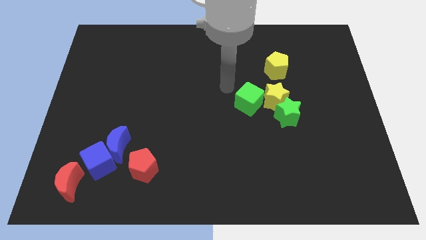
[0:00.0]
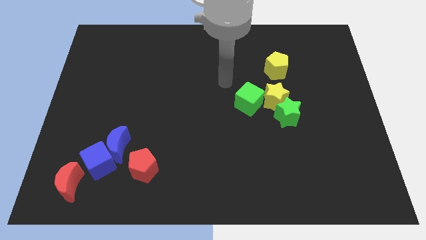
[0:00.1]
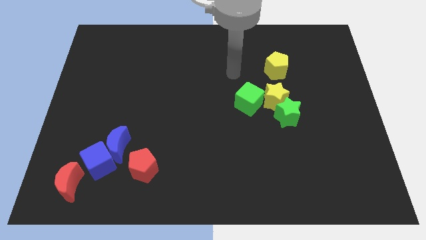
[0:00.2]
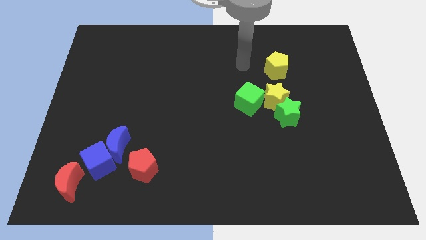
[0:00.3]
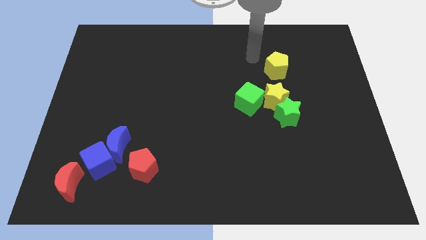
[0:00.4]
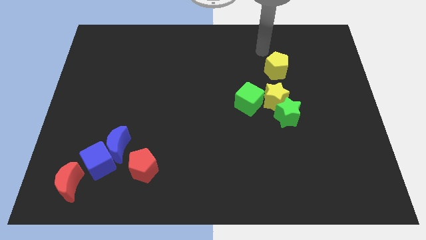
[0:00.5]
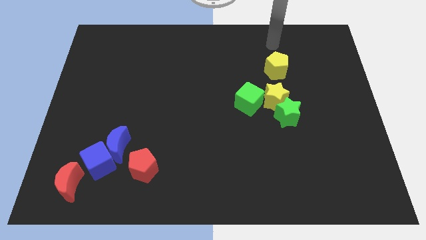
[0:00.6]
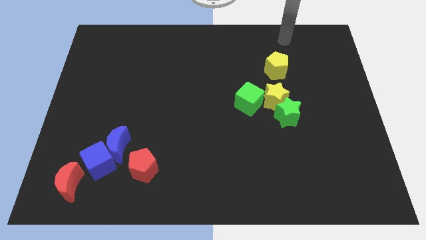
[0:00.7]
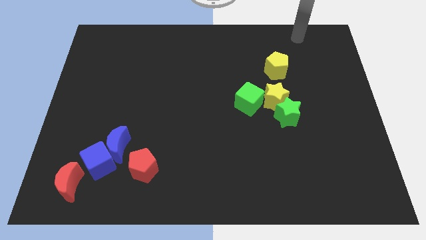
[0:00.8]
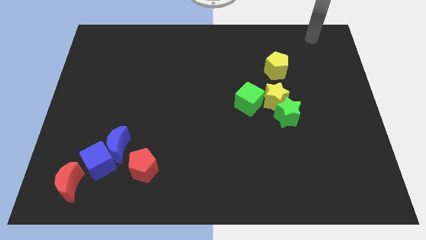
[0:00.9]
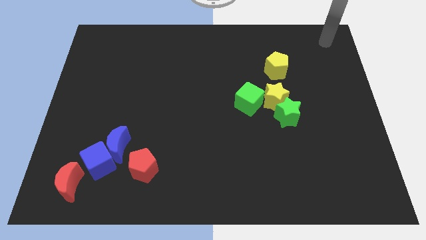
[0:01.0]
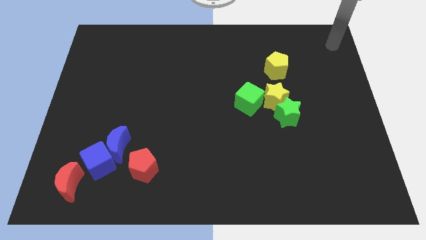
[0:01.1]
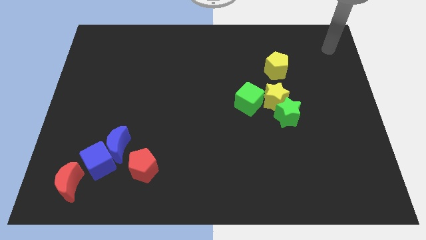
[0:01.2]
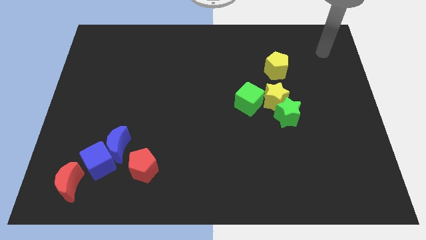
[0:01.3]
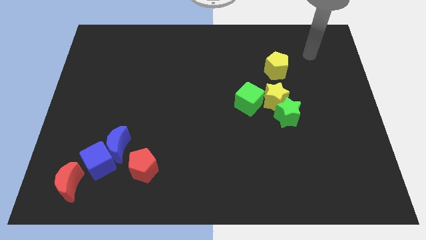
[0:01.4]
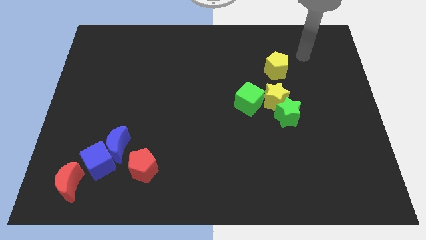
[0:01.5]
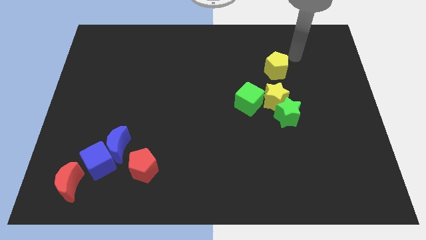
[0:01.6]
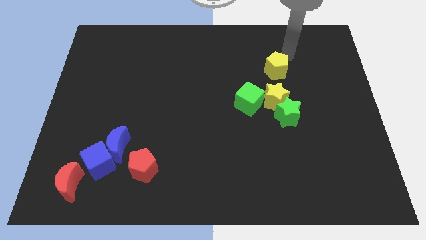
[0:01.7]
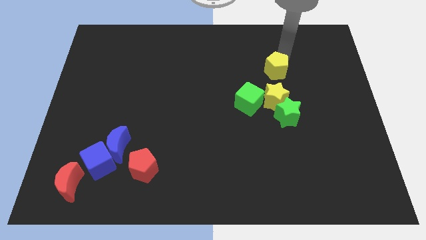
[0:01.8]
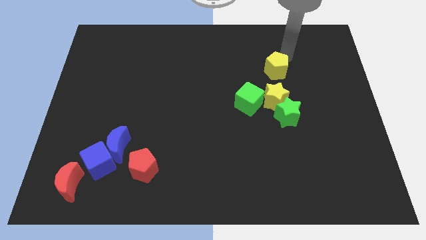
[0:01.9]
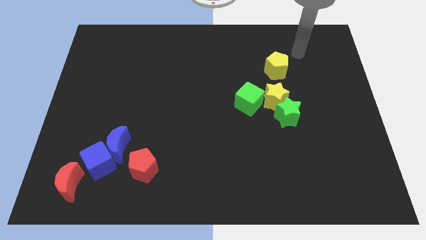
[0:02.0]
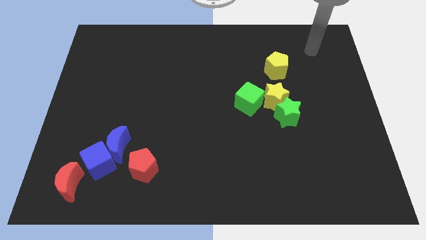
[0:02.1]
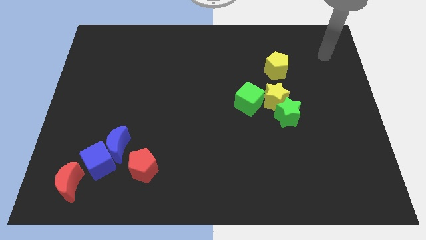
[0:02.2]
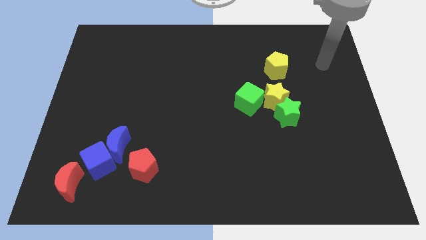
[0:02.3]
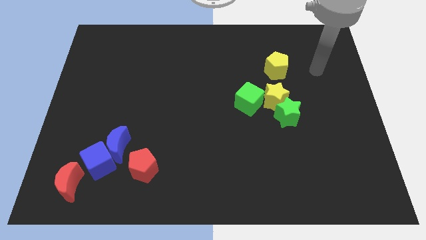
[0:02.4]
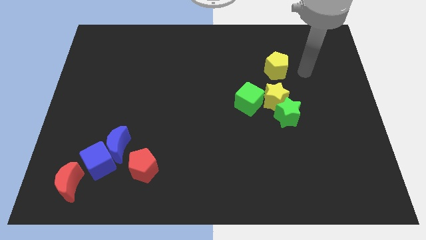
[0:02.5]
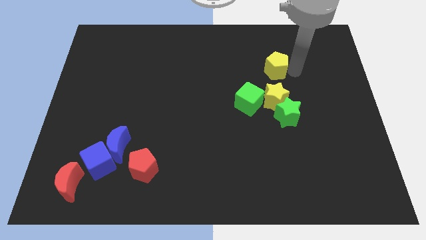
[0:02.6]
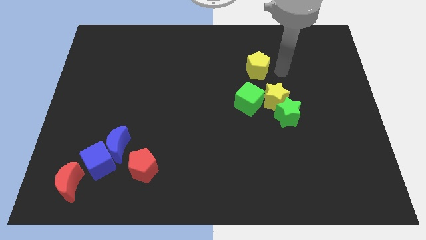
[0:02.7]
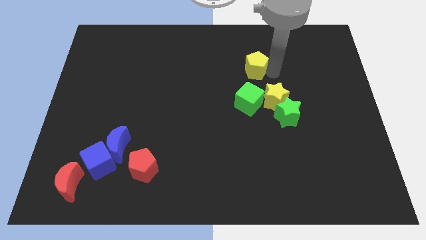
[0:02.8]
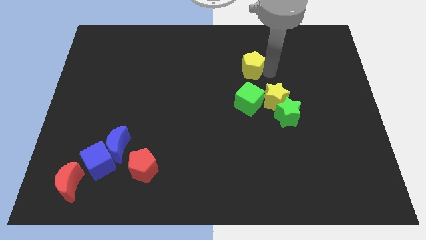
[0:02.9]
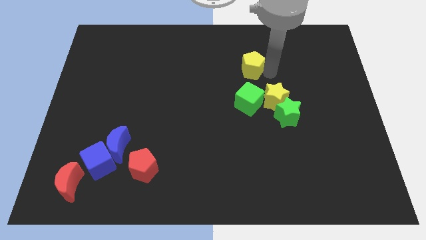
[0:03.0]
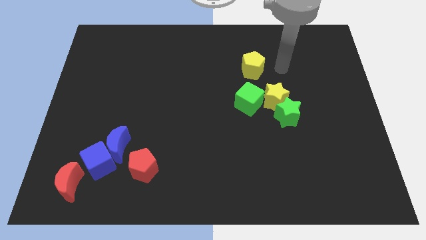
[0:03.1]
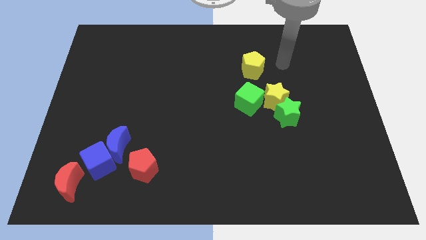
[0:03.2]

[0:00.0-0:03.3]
place the yellow pentagon above the green cube

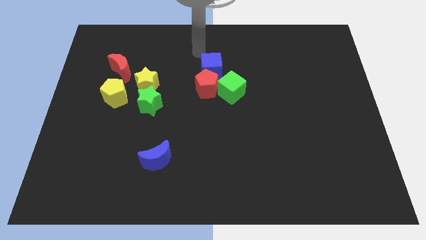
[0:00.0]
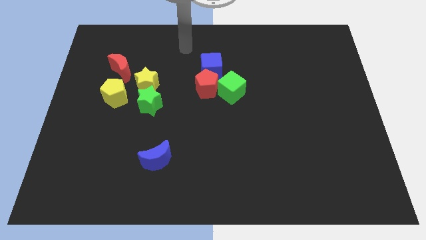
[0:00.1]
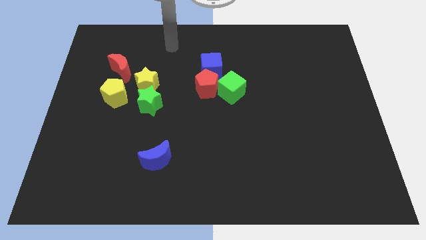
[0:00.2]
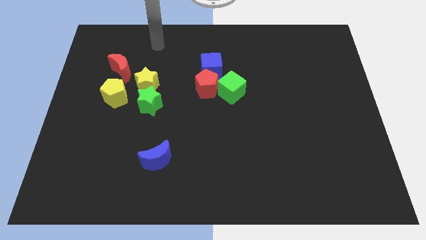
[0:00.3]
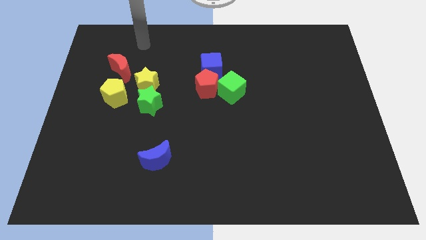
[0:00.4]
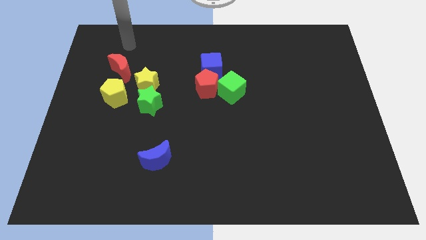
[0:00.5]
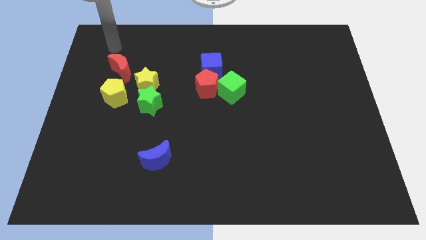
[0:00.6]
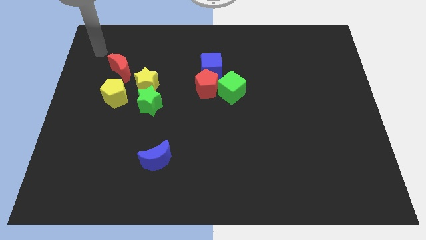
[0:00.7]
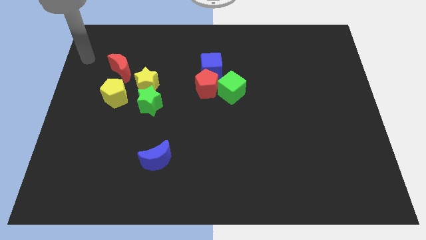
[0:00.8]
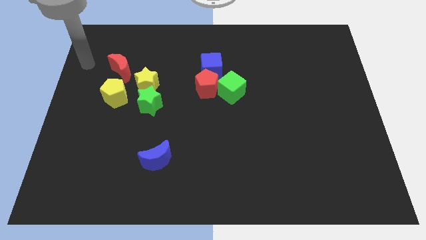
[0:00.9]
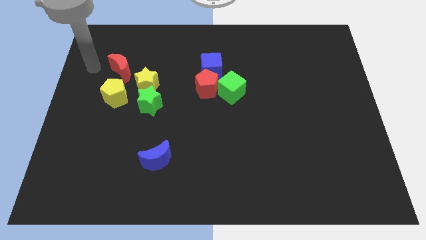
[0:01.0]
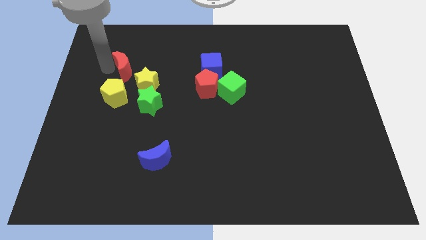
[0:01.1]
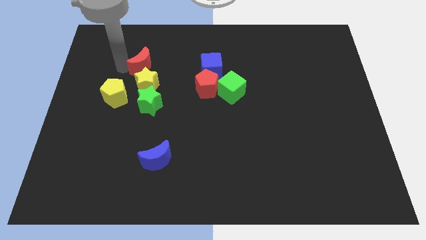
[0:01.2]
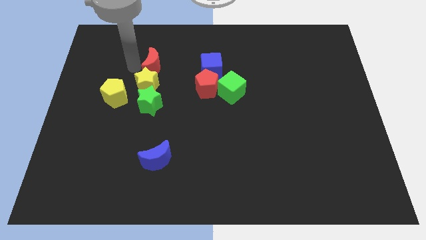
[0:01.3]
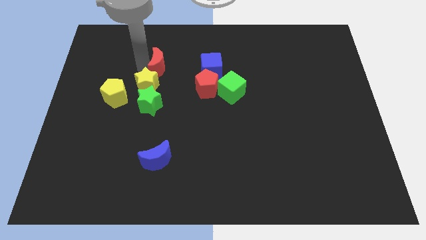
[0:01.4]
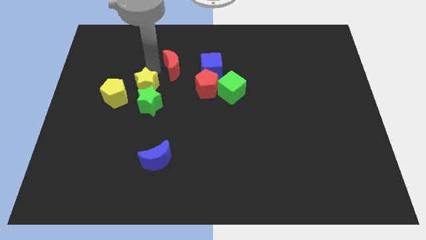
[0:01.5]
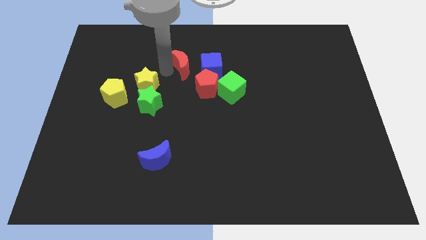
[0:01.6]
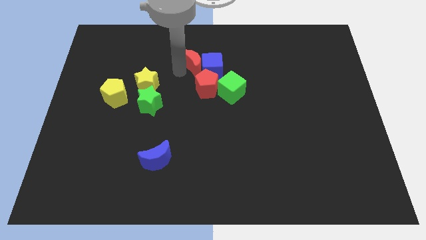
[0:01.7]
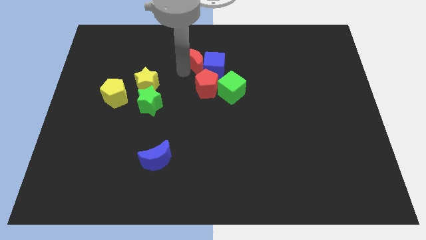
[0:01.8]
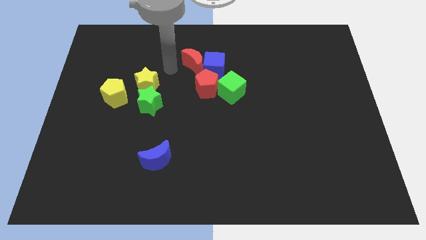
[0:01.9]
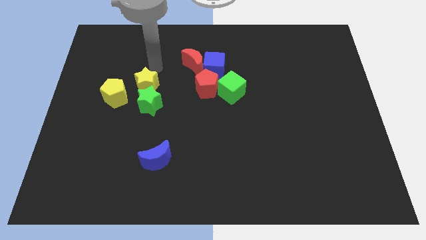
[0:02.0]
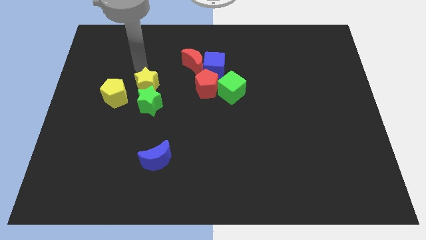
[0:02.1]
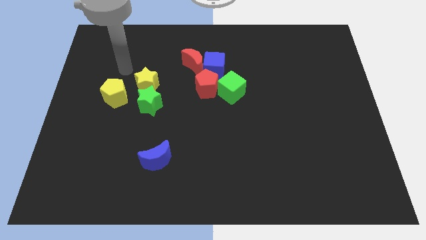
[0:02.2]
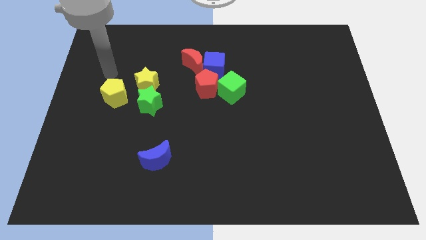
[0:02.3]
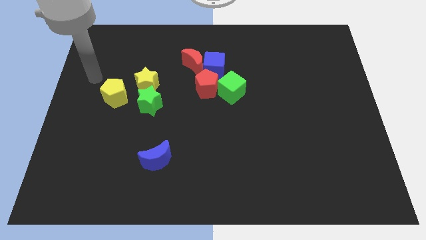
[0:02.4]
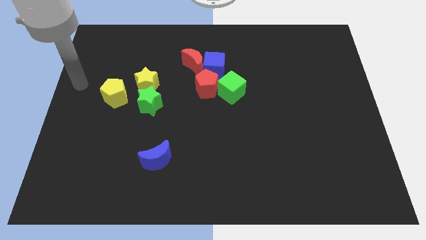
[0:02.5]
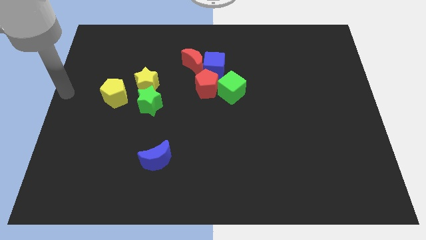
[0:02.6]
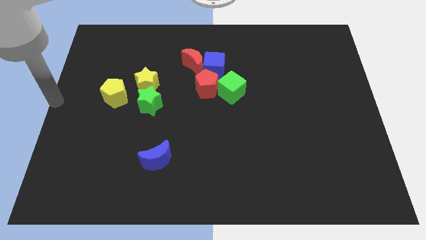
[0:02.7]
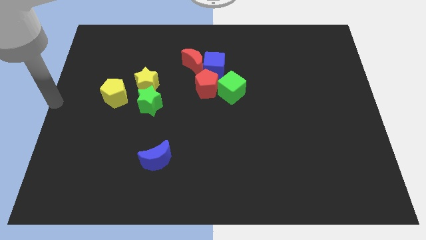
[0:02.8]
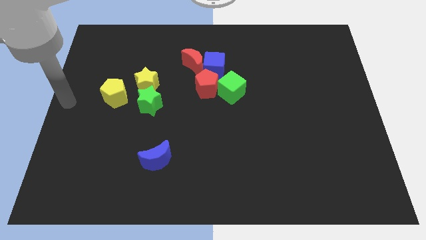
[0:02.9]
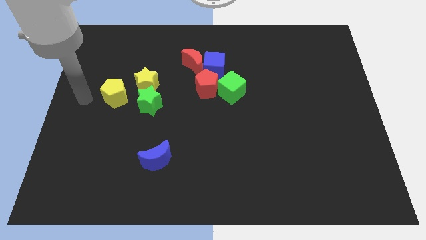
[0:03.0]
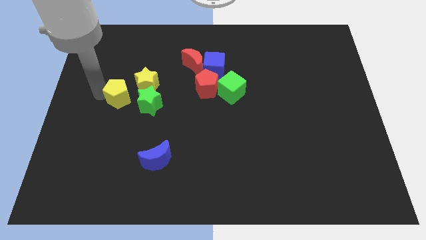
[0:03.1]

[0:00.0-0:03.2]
move the red moon into the blue cube

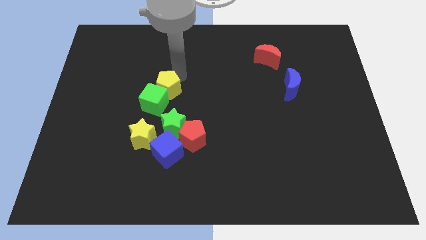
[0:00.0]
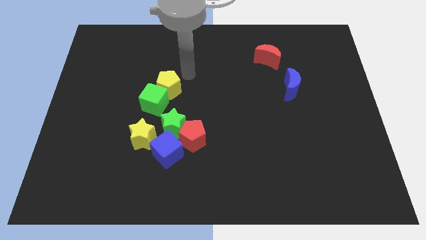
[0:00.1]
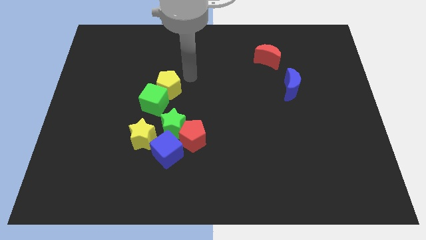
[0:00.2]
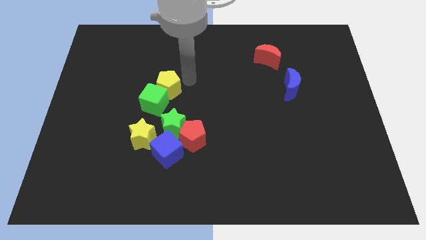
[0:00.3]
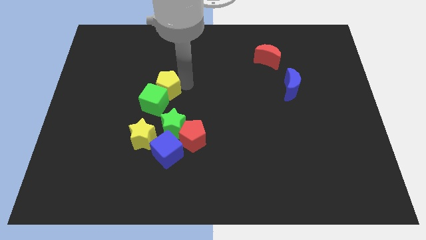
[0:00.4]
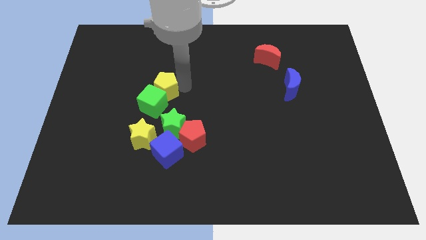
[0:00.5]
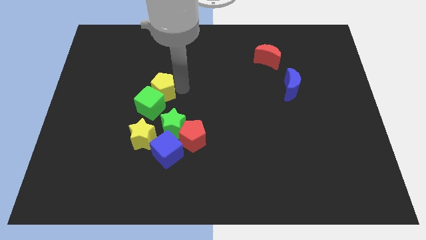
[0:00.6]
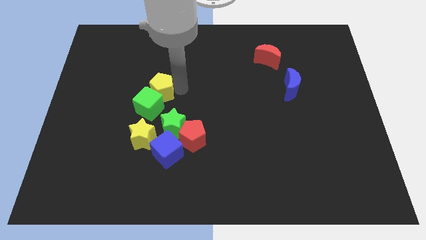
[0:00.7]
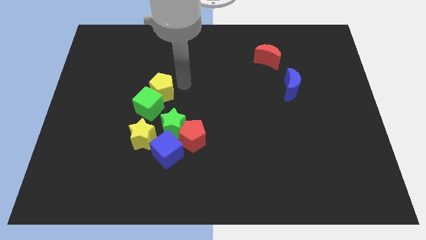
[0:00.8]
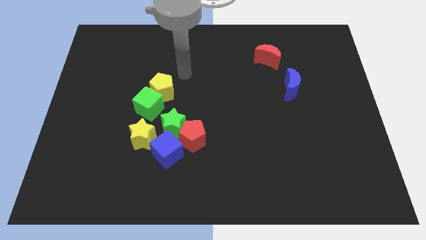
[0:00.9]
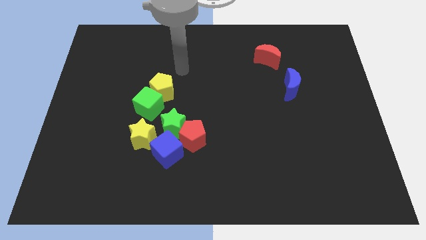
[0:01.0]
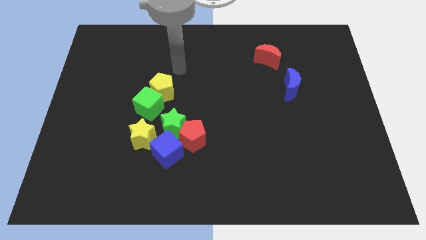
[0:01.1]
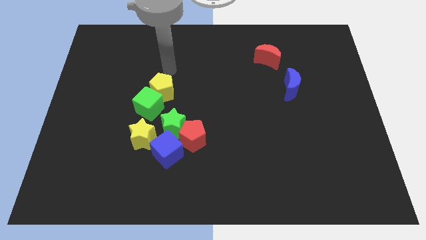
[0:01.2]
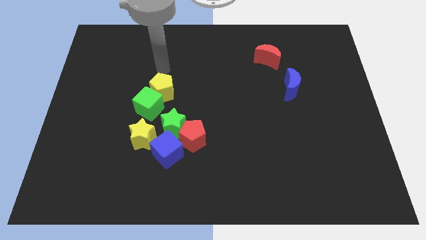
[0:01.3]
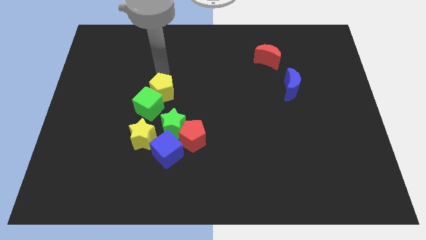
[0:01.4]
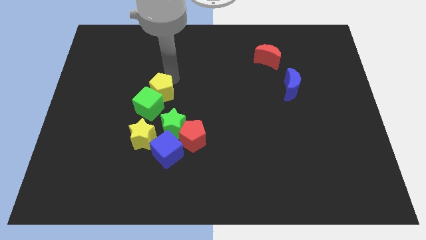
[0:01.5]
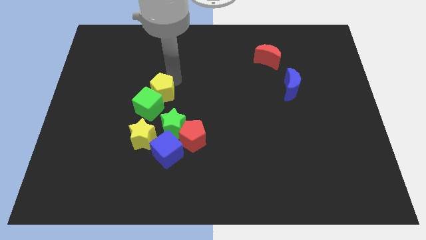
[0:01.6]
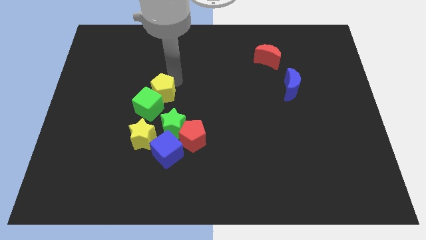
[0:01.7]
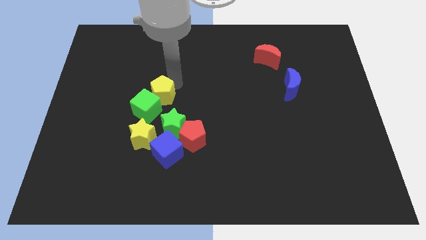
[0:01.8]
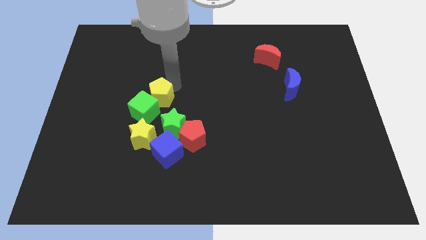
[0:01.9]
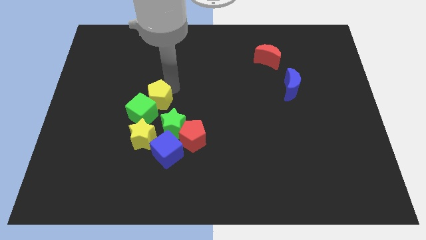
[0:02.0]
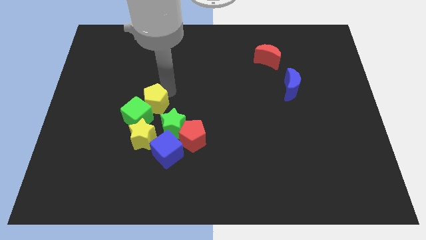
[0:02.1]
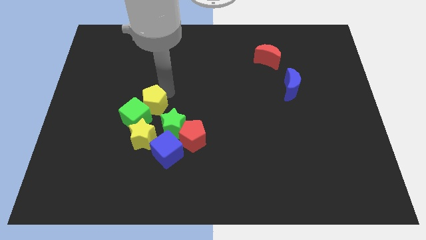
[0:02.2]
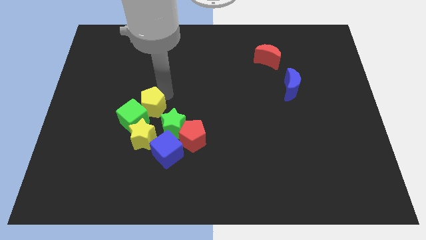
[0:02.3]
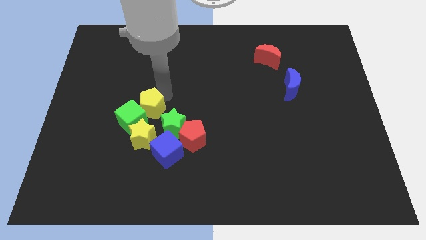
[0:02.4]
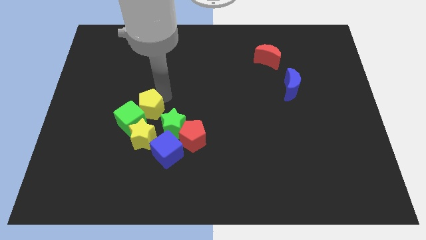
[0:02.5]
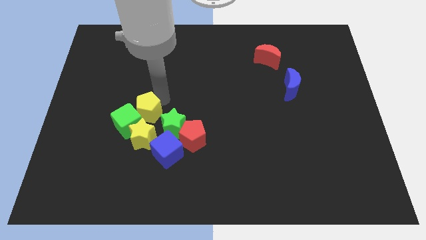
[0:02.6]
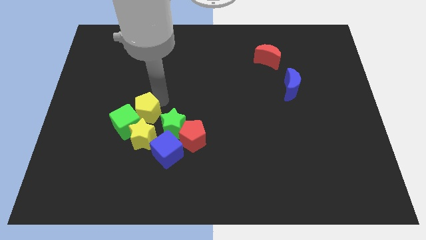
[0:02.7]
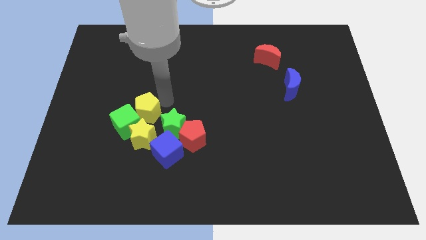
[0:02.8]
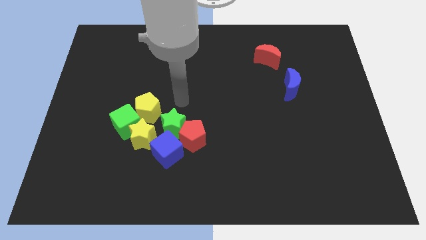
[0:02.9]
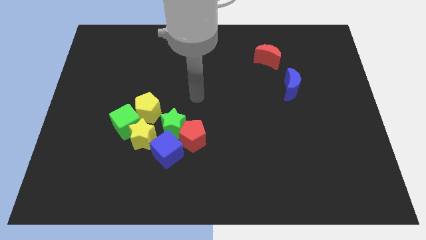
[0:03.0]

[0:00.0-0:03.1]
place the yellow pentagon and green cube at the left side of the group of blocks
